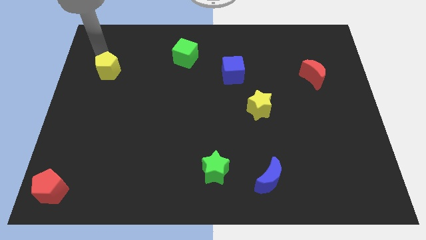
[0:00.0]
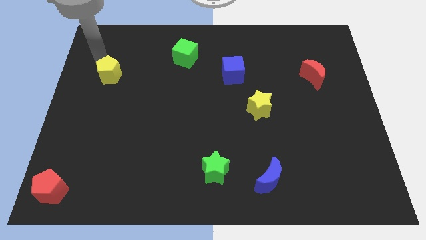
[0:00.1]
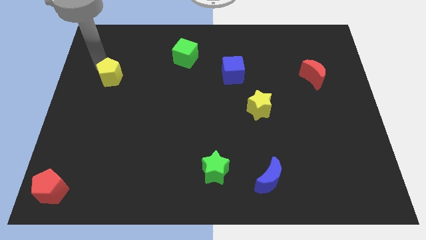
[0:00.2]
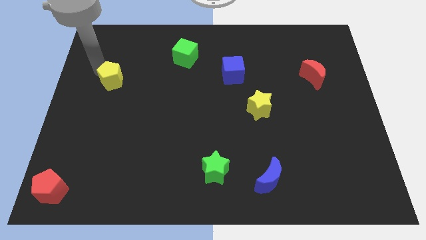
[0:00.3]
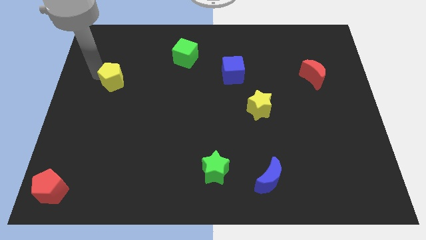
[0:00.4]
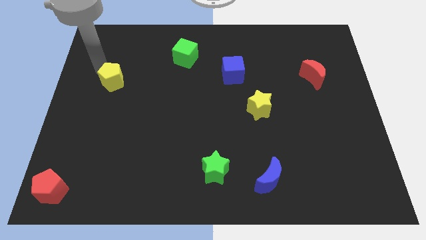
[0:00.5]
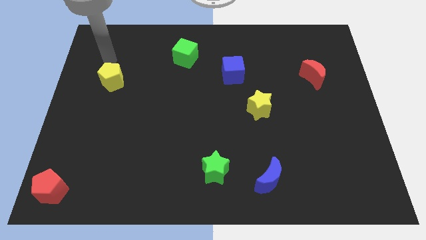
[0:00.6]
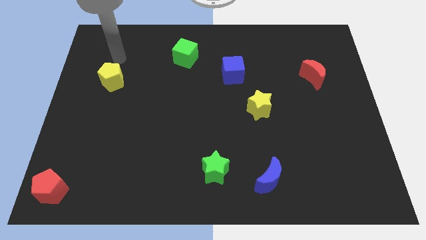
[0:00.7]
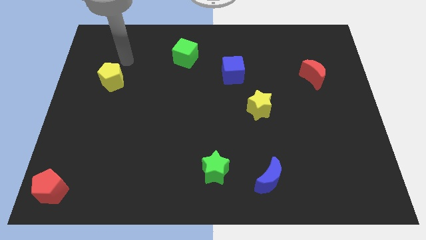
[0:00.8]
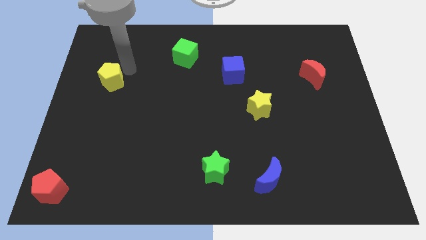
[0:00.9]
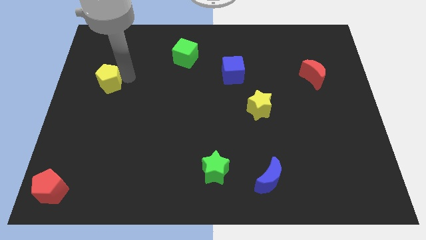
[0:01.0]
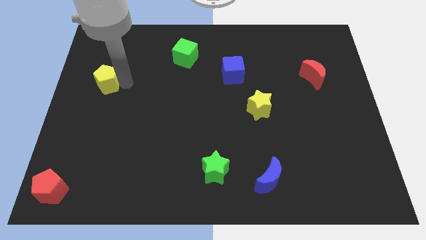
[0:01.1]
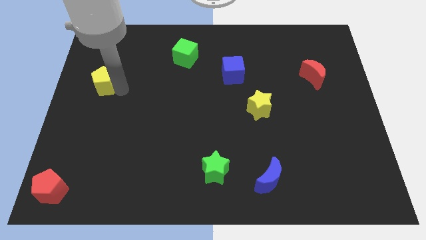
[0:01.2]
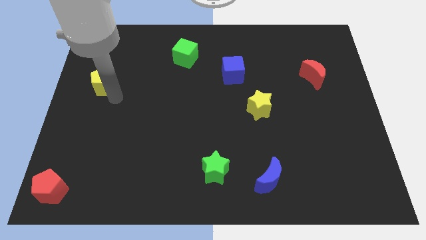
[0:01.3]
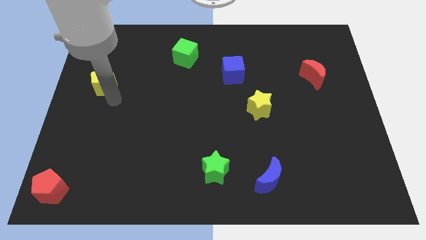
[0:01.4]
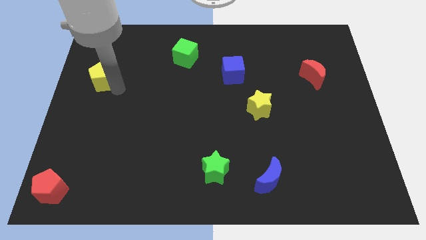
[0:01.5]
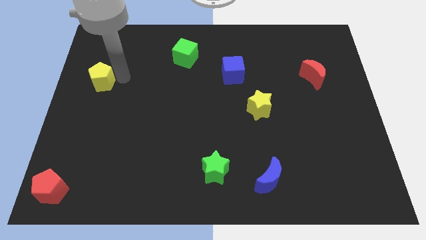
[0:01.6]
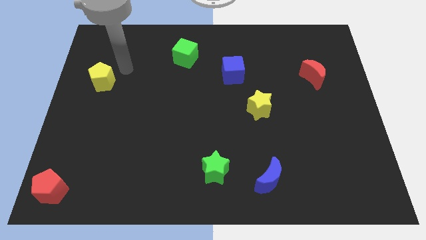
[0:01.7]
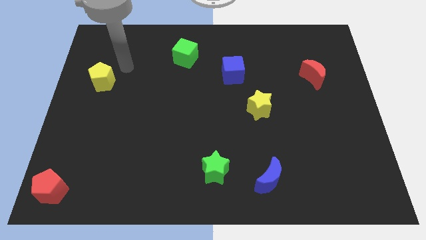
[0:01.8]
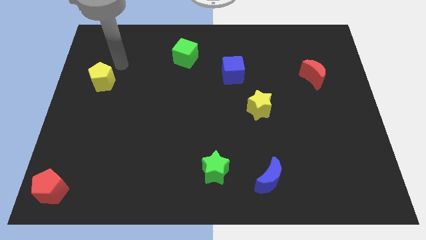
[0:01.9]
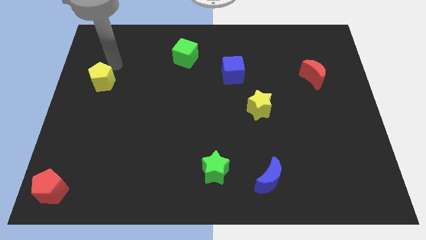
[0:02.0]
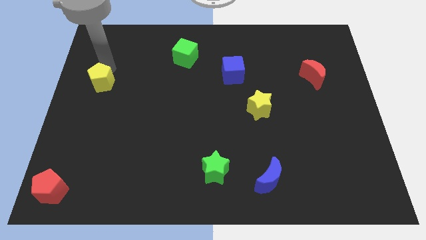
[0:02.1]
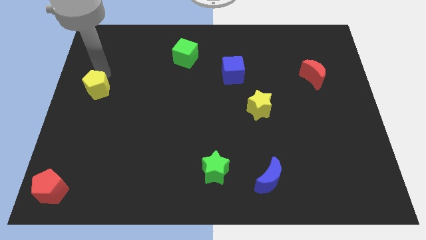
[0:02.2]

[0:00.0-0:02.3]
push the yellow pentagon towards the bottom

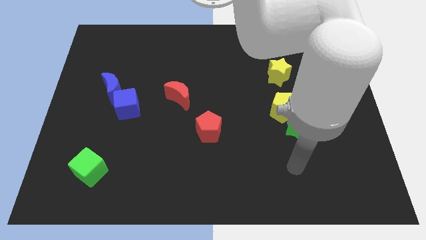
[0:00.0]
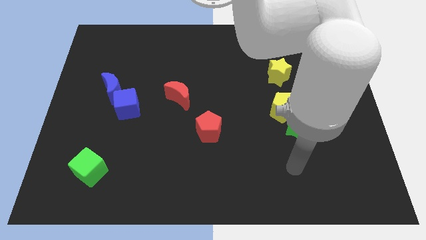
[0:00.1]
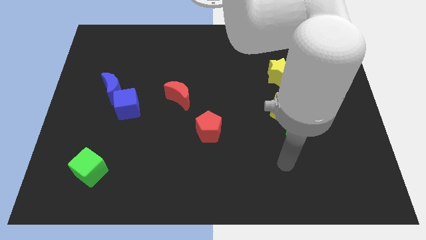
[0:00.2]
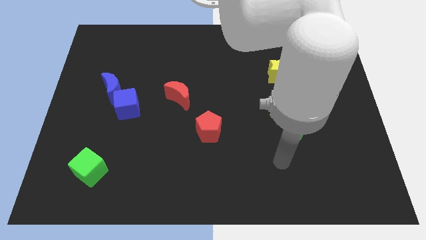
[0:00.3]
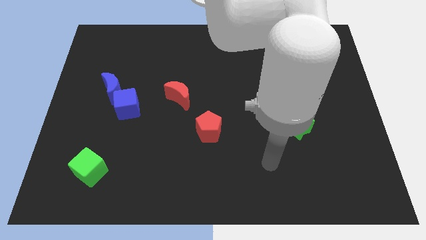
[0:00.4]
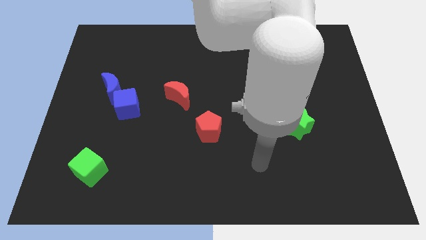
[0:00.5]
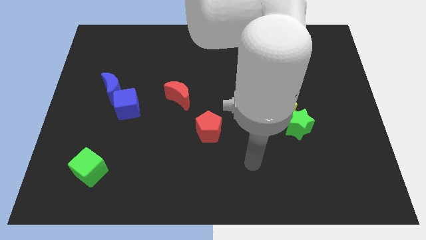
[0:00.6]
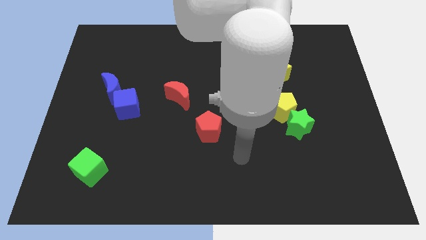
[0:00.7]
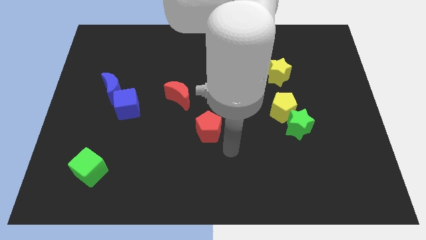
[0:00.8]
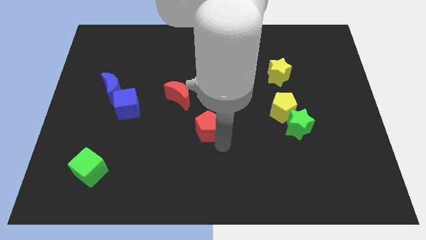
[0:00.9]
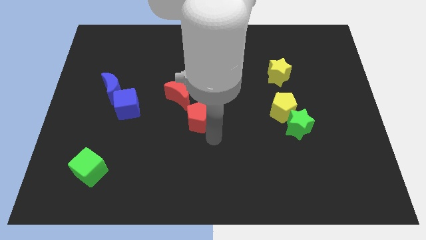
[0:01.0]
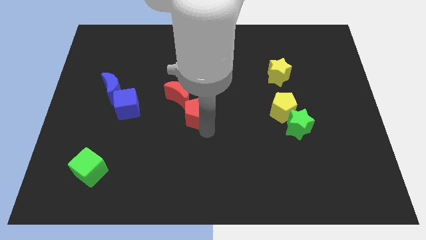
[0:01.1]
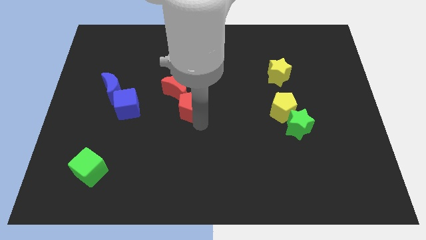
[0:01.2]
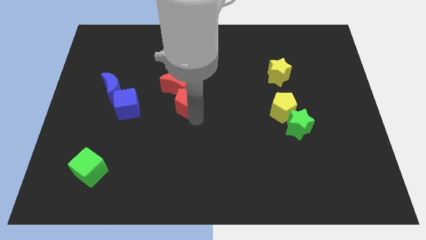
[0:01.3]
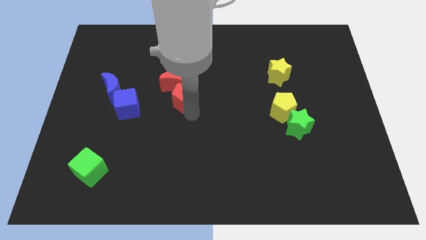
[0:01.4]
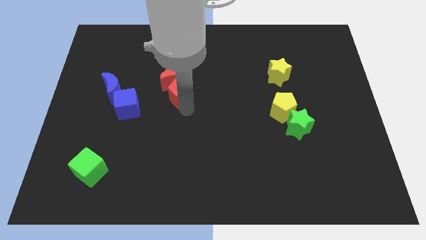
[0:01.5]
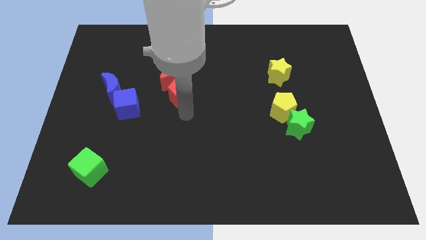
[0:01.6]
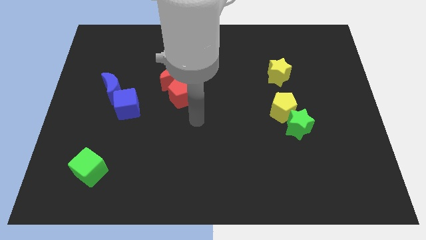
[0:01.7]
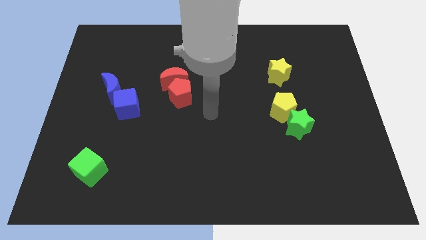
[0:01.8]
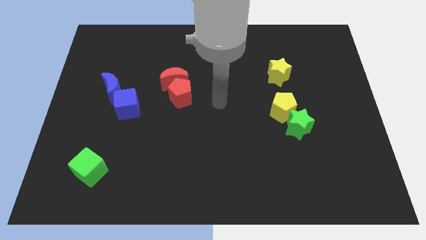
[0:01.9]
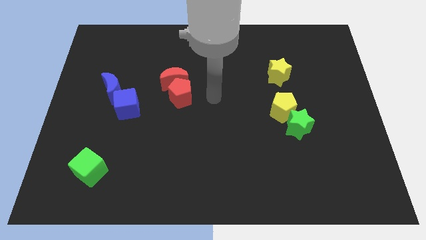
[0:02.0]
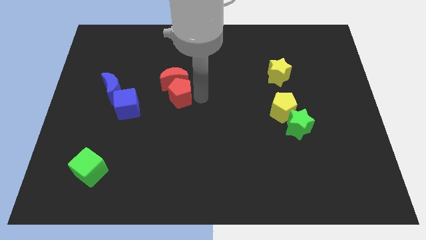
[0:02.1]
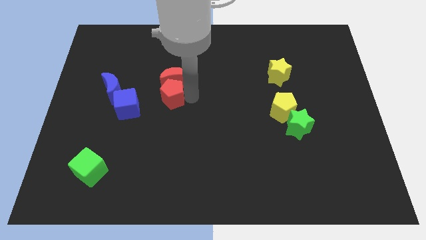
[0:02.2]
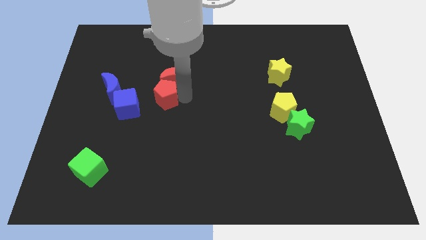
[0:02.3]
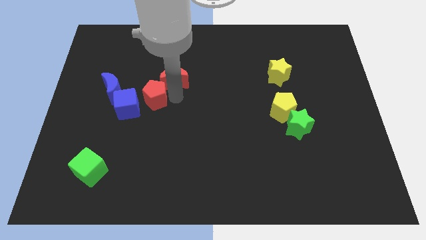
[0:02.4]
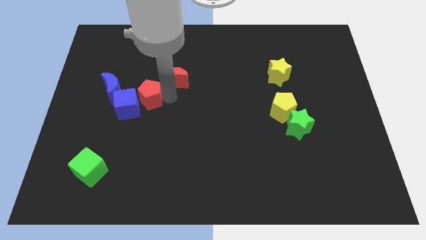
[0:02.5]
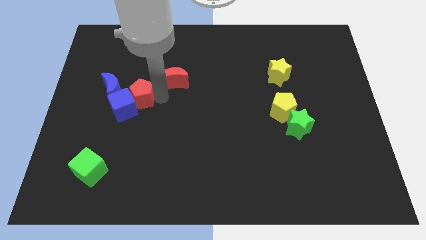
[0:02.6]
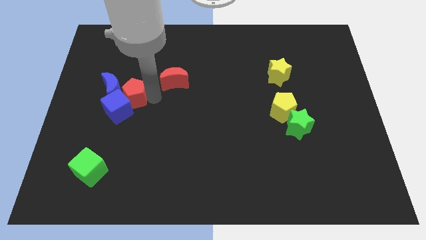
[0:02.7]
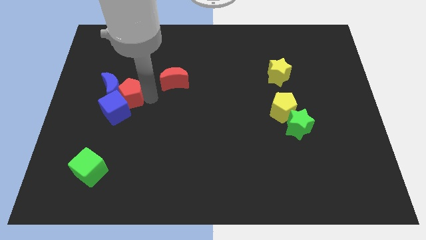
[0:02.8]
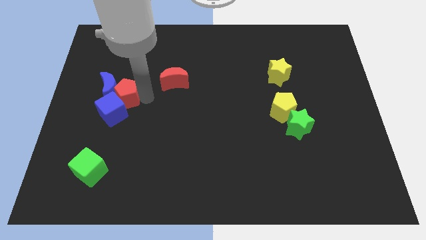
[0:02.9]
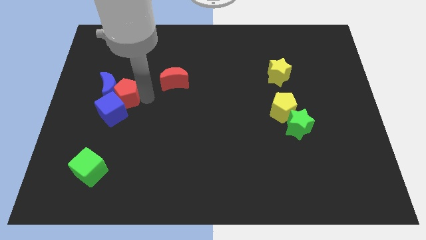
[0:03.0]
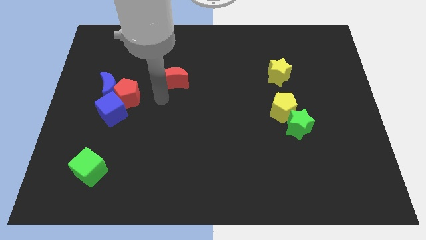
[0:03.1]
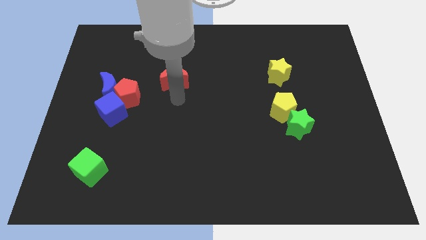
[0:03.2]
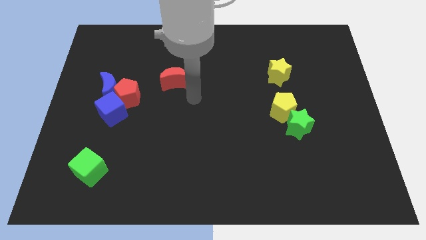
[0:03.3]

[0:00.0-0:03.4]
push red pentagon towards blue moon

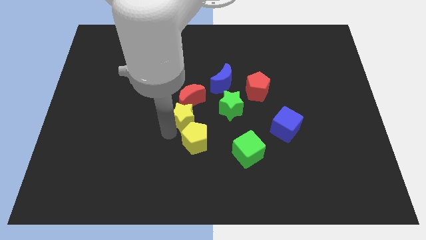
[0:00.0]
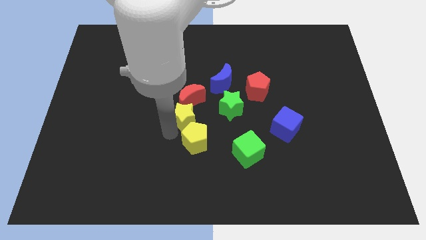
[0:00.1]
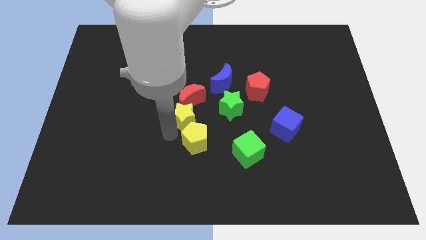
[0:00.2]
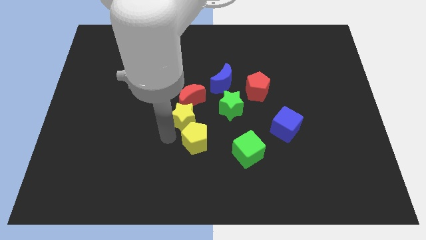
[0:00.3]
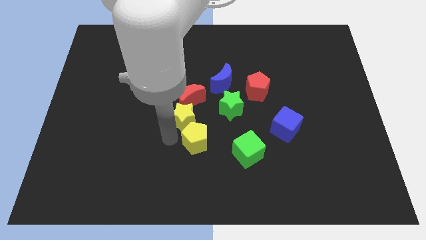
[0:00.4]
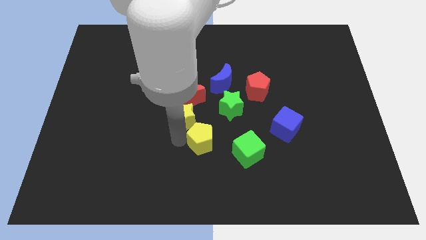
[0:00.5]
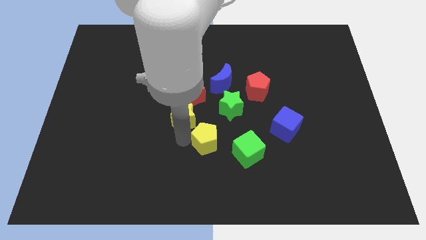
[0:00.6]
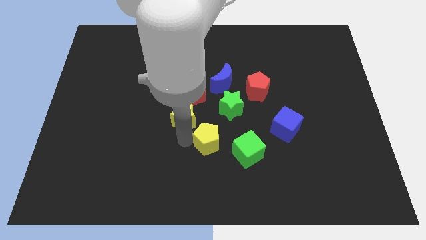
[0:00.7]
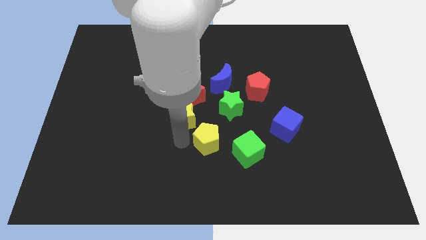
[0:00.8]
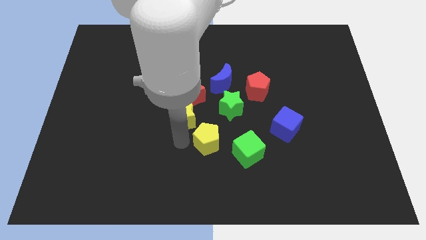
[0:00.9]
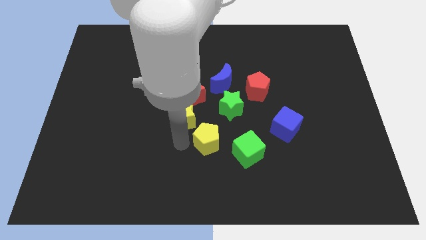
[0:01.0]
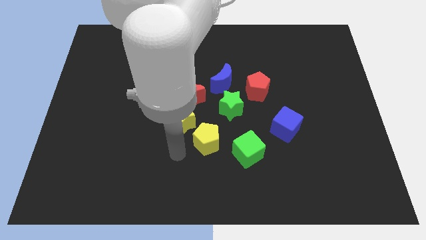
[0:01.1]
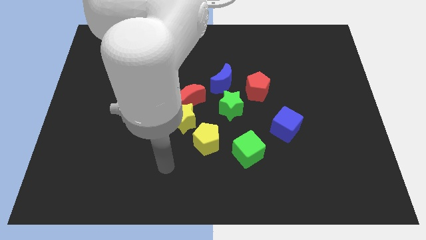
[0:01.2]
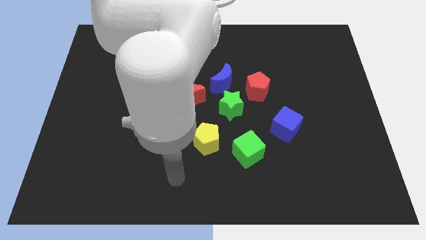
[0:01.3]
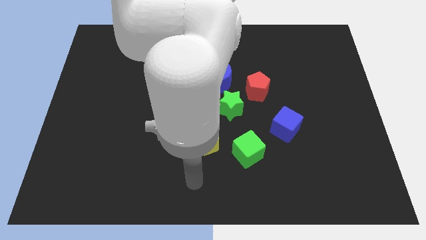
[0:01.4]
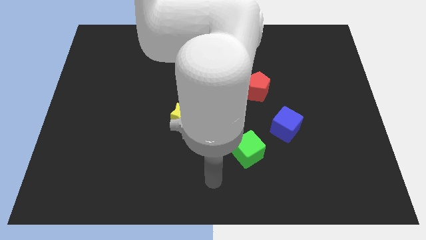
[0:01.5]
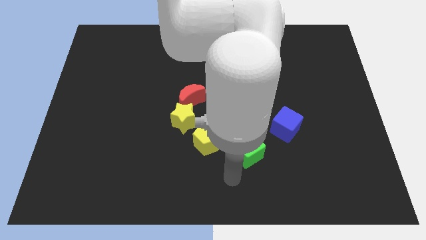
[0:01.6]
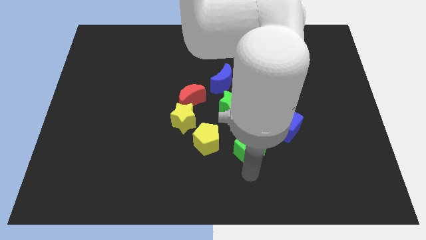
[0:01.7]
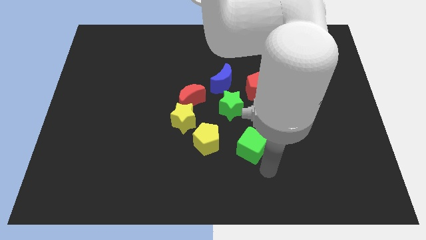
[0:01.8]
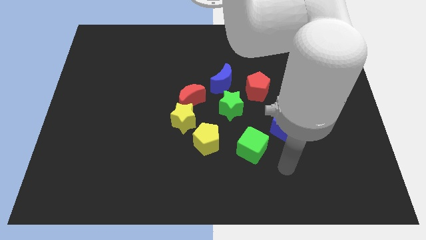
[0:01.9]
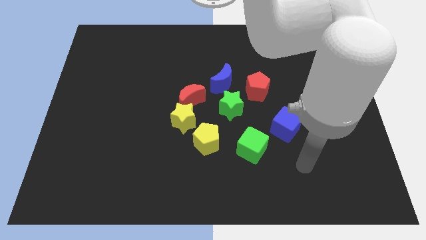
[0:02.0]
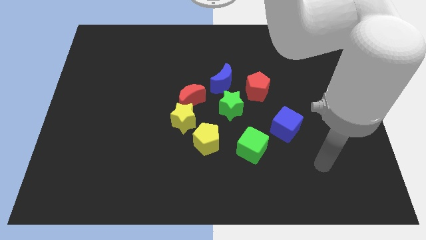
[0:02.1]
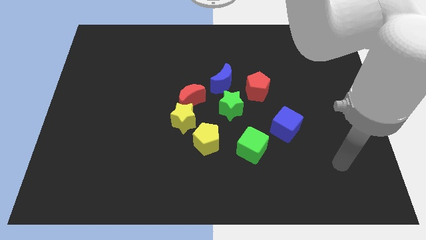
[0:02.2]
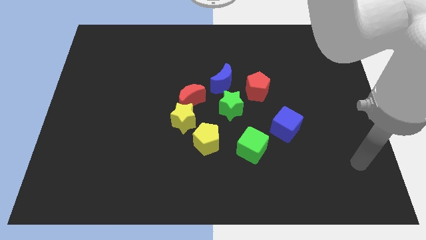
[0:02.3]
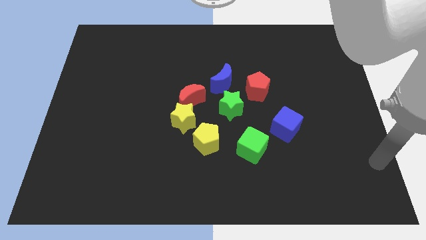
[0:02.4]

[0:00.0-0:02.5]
push the yellow pentagon to the left side of the green cube

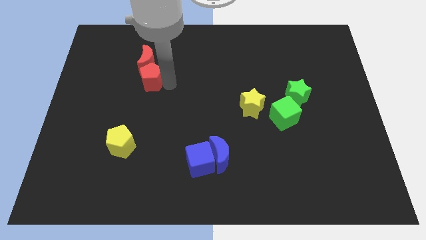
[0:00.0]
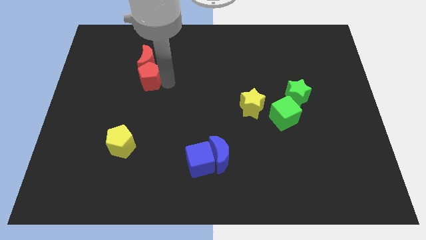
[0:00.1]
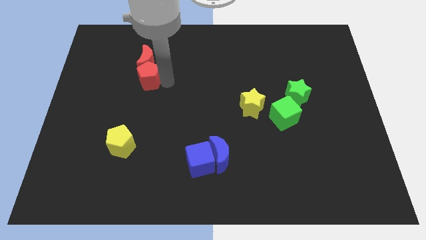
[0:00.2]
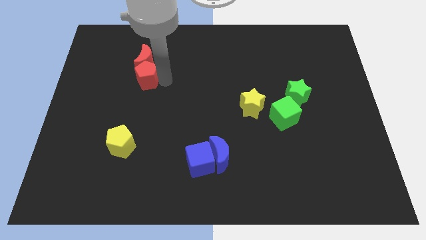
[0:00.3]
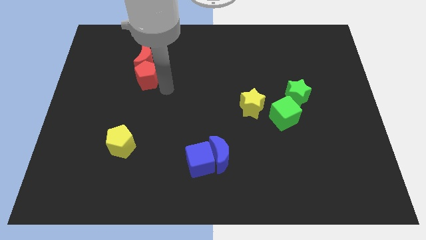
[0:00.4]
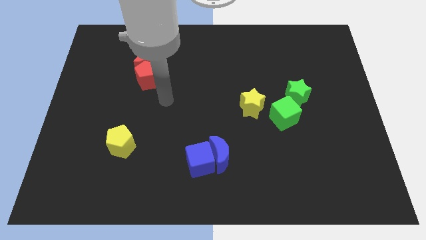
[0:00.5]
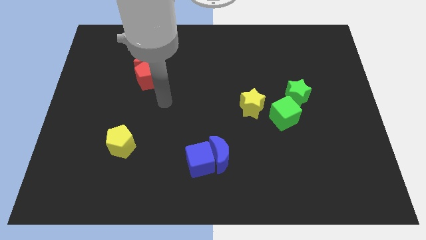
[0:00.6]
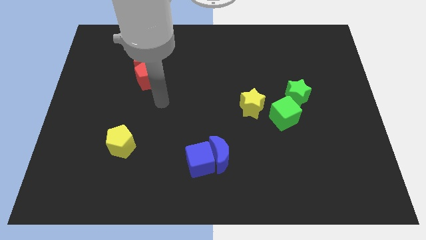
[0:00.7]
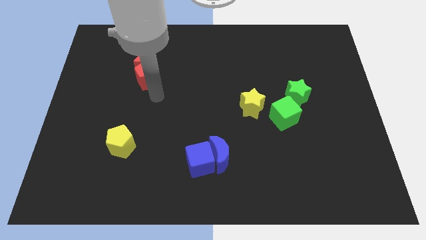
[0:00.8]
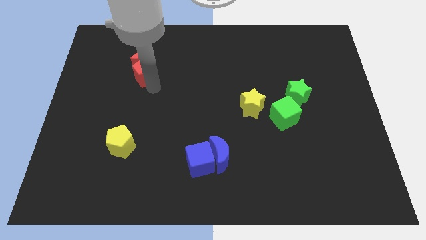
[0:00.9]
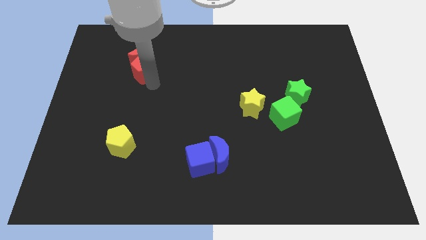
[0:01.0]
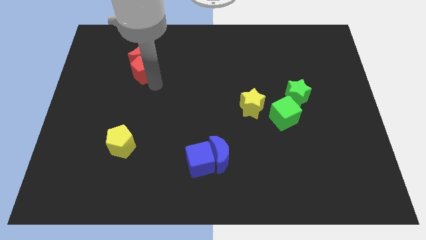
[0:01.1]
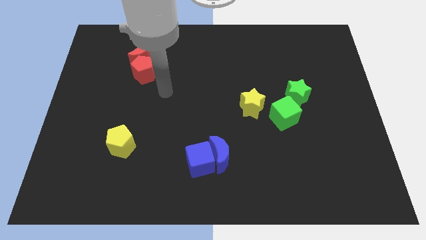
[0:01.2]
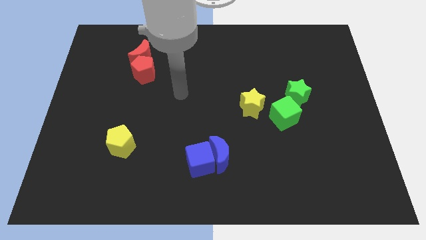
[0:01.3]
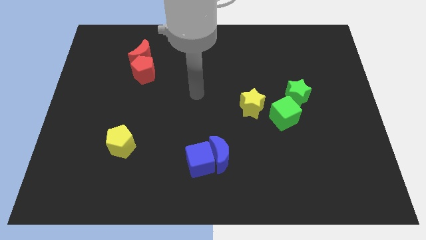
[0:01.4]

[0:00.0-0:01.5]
move the red pentagon into the red crescent
